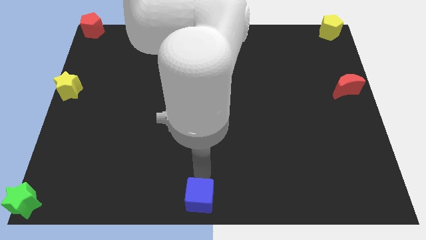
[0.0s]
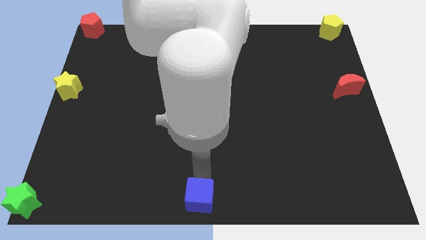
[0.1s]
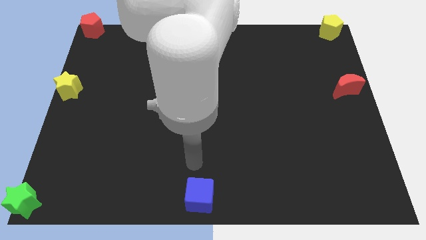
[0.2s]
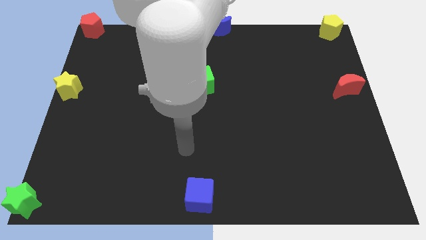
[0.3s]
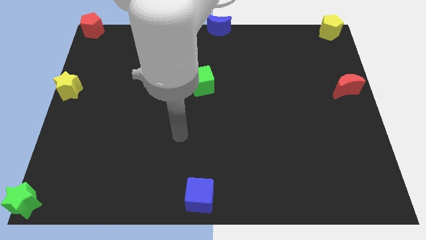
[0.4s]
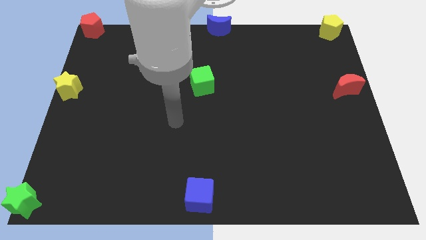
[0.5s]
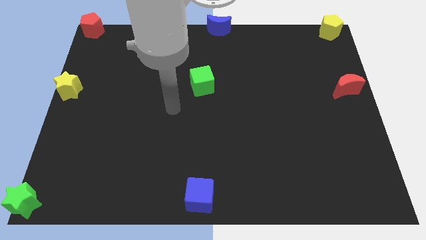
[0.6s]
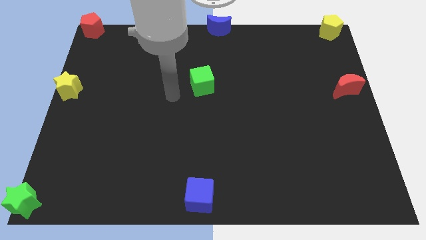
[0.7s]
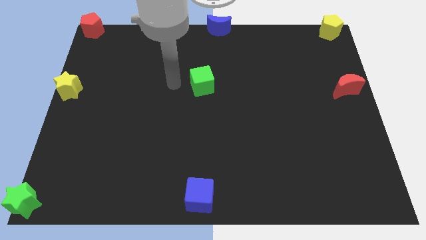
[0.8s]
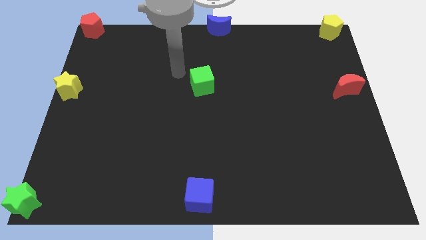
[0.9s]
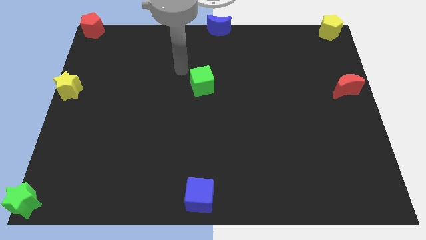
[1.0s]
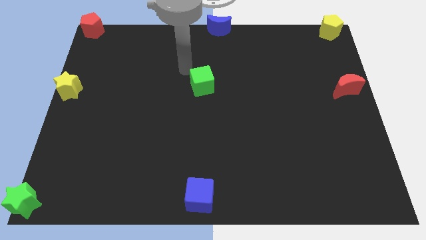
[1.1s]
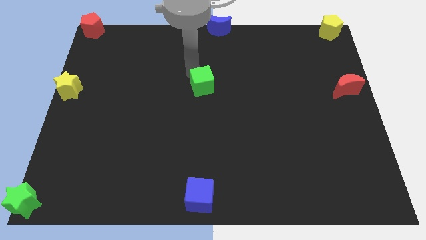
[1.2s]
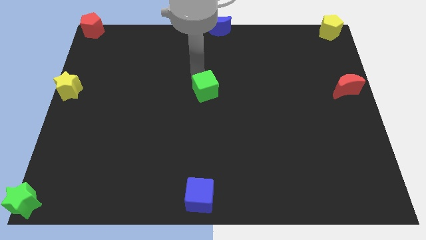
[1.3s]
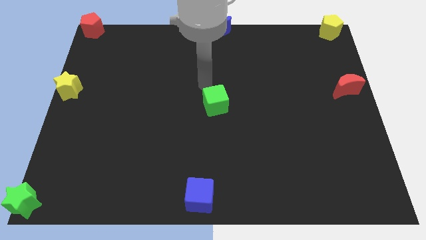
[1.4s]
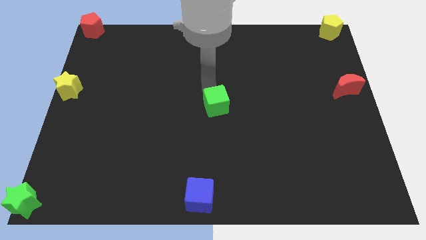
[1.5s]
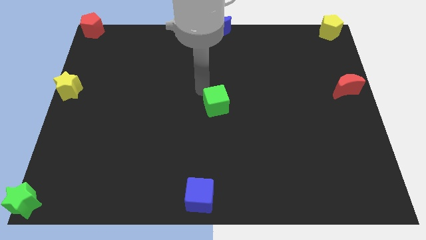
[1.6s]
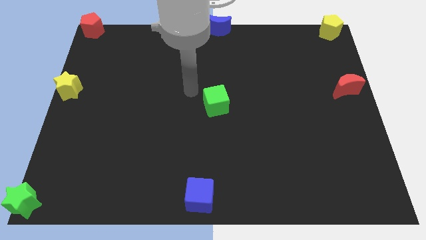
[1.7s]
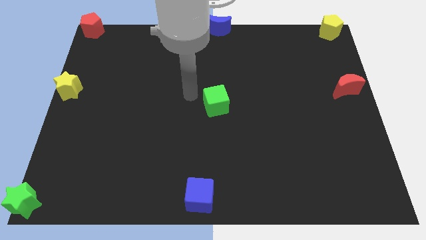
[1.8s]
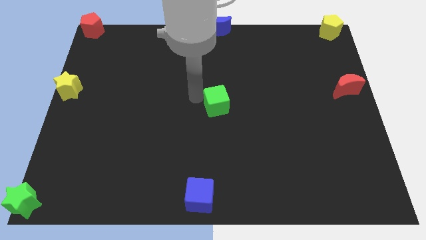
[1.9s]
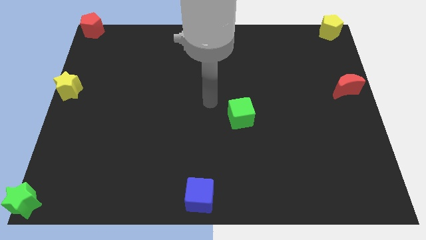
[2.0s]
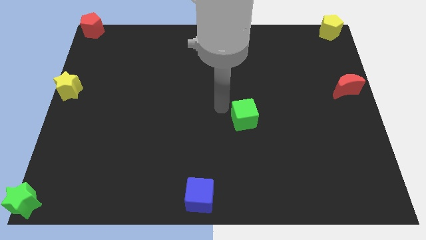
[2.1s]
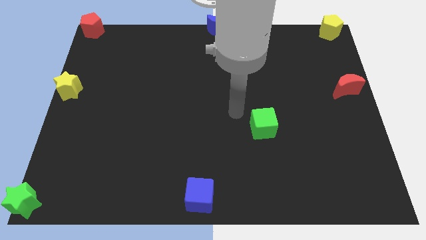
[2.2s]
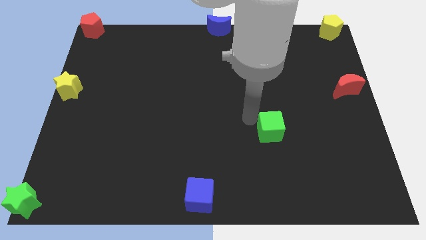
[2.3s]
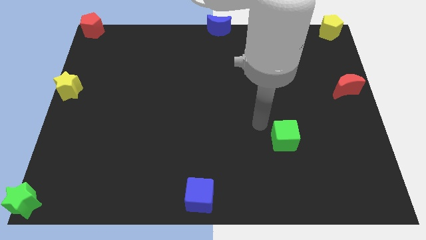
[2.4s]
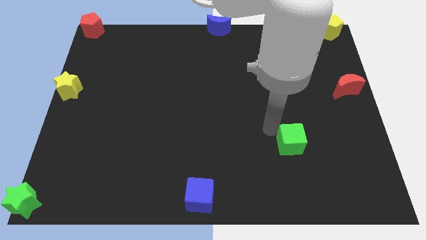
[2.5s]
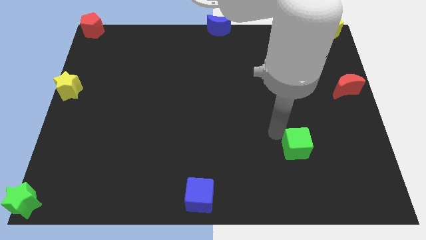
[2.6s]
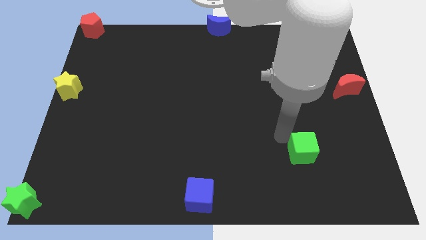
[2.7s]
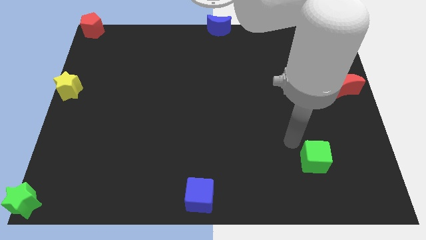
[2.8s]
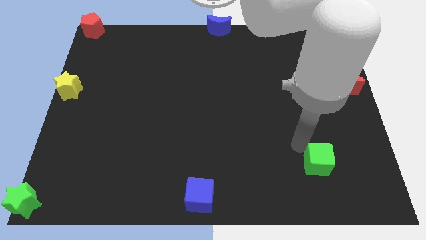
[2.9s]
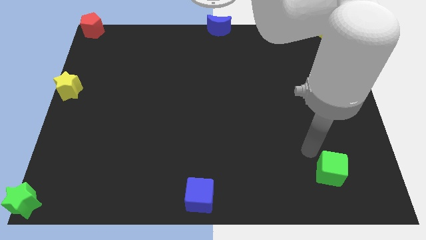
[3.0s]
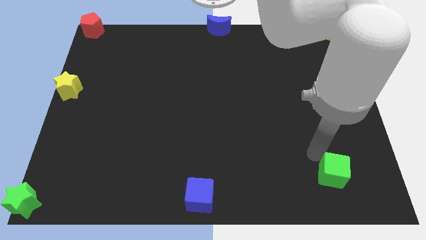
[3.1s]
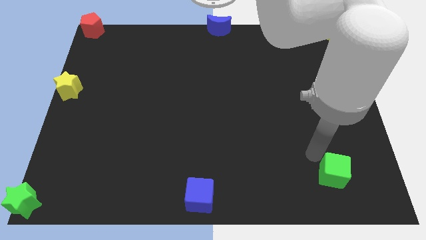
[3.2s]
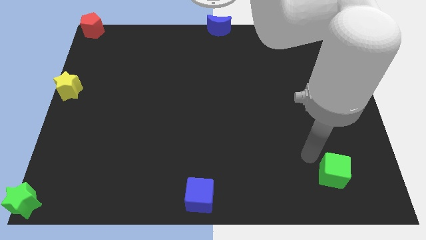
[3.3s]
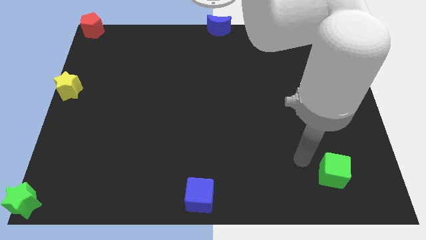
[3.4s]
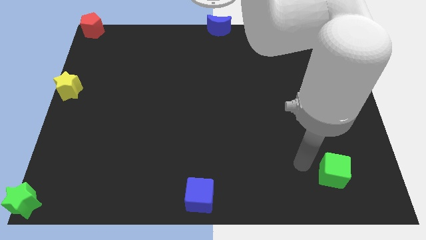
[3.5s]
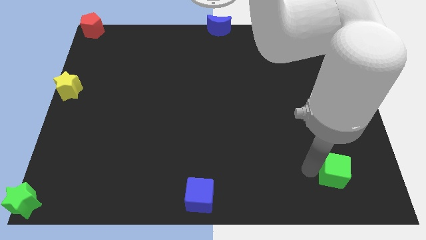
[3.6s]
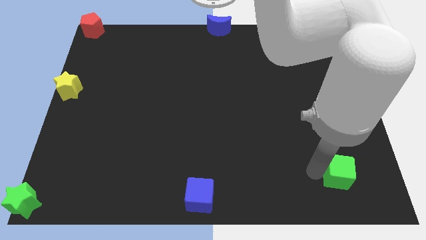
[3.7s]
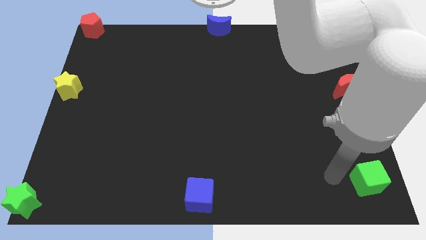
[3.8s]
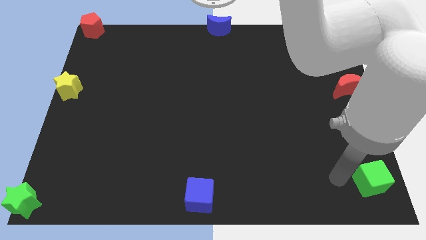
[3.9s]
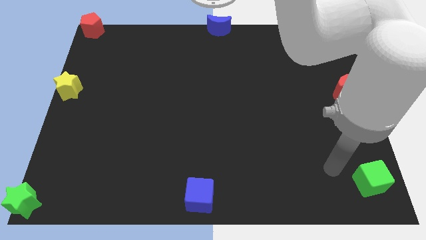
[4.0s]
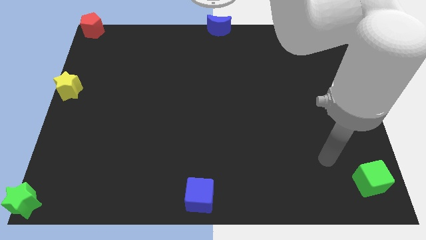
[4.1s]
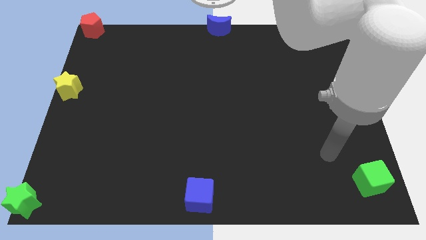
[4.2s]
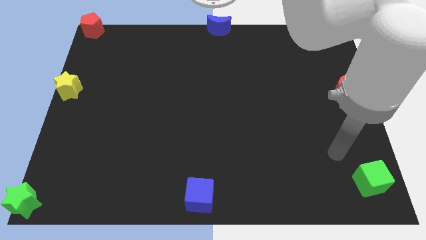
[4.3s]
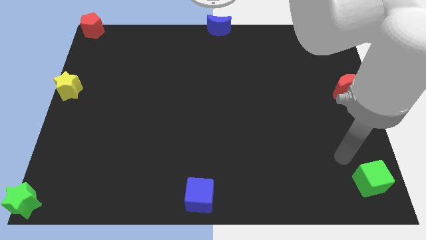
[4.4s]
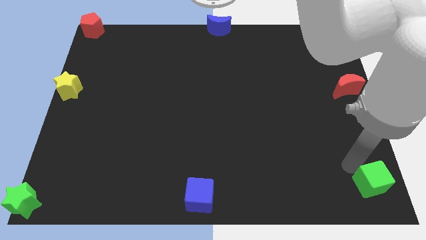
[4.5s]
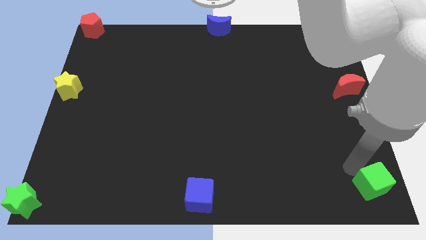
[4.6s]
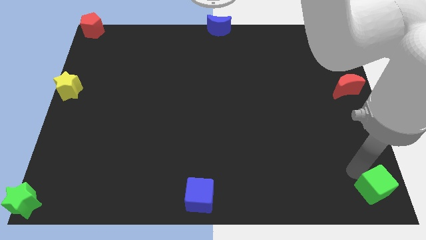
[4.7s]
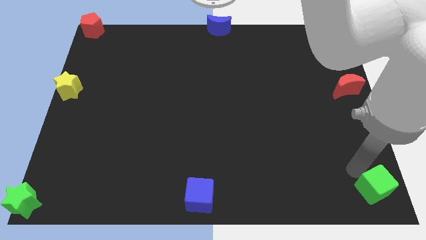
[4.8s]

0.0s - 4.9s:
push green cube to the bottom right corner of the board

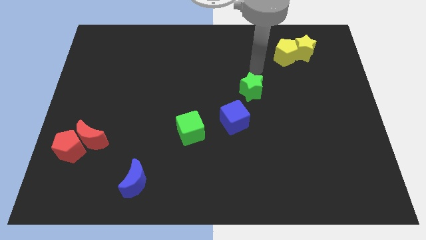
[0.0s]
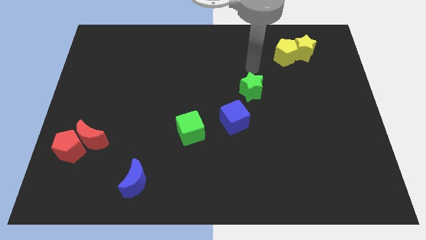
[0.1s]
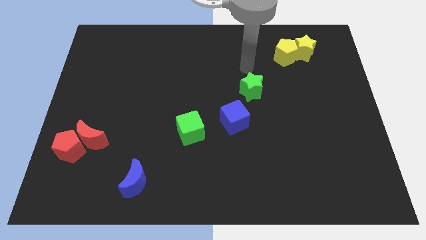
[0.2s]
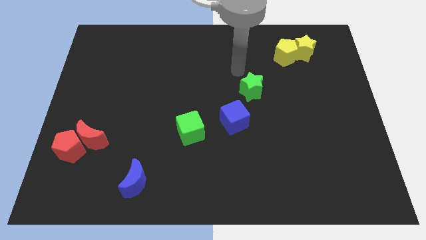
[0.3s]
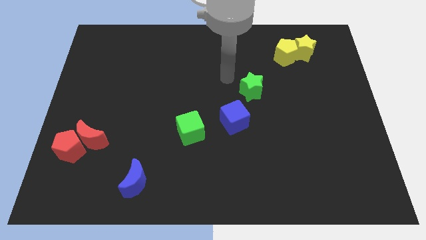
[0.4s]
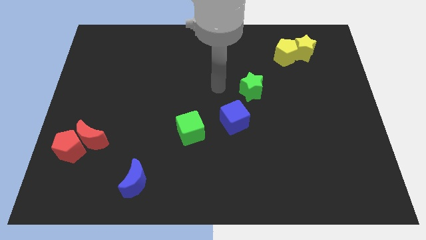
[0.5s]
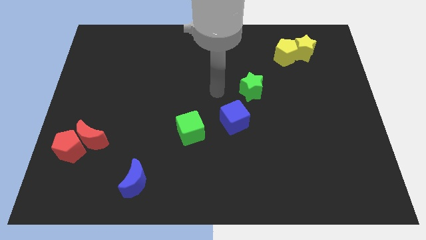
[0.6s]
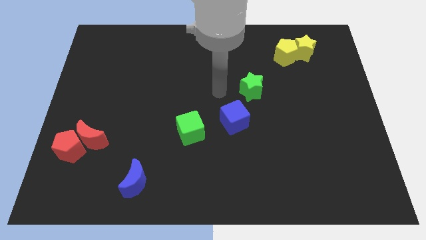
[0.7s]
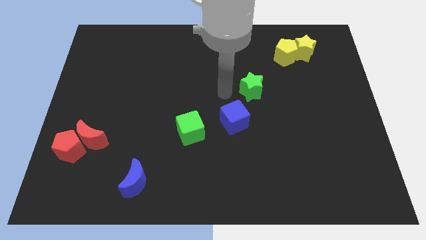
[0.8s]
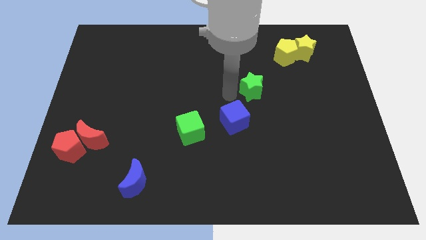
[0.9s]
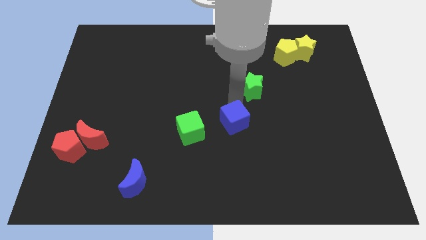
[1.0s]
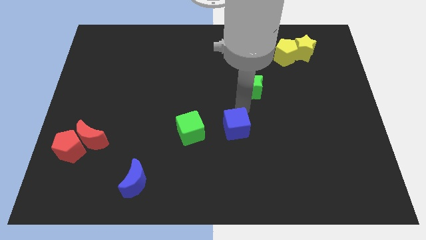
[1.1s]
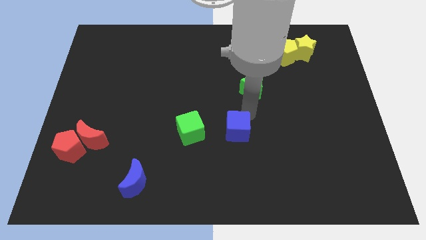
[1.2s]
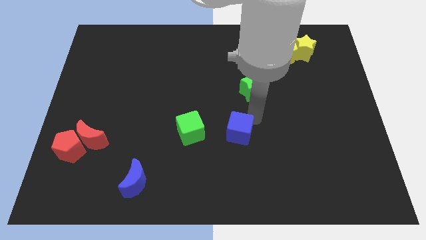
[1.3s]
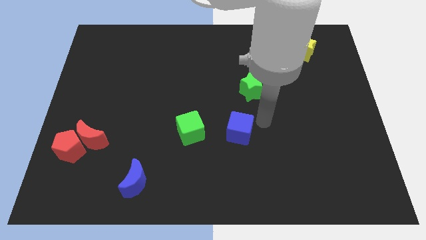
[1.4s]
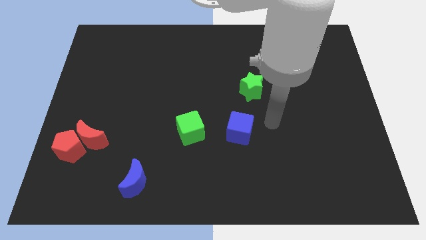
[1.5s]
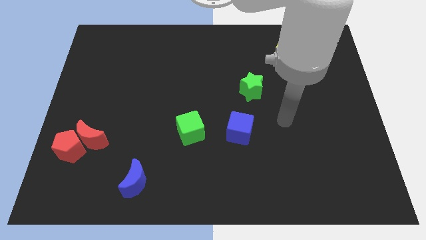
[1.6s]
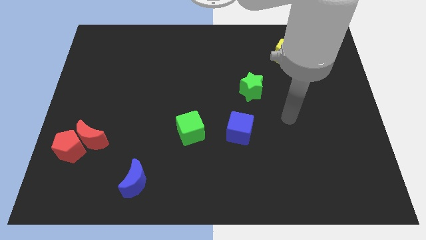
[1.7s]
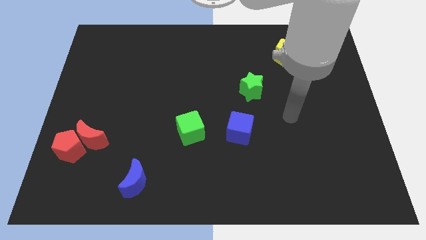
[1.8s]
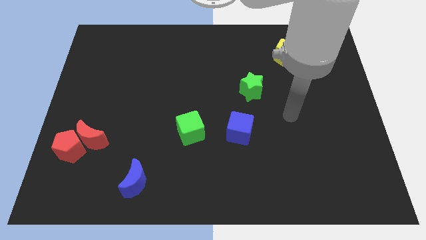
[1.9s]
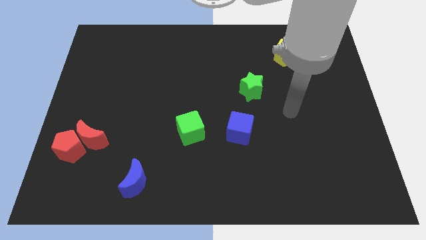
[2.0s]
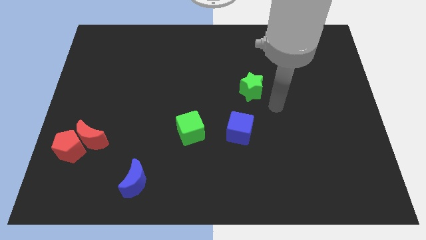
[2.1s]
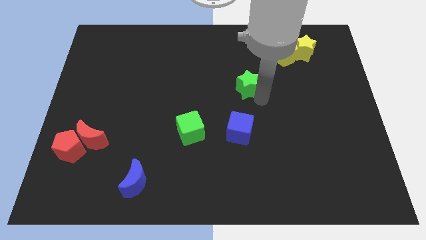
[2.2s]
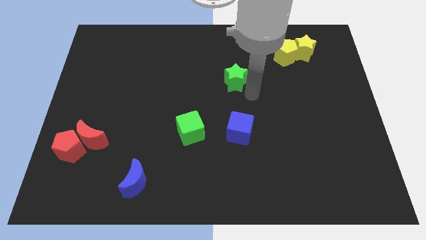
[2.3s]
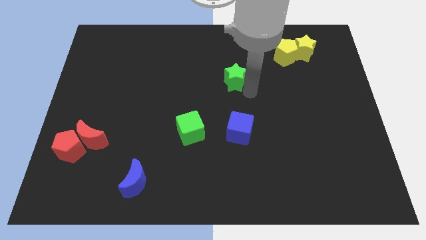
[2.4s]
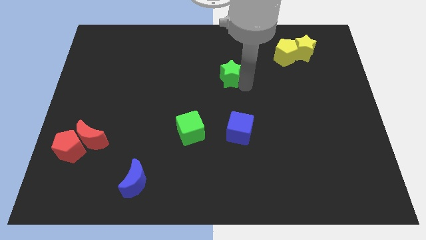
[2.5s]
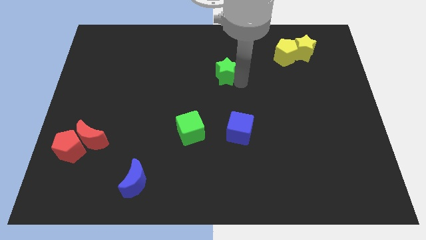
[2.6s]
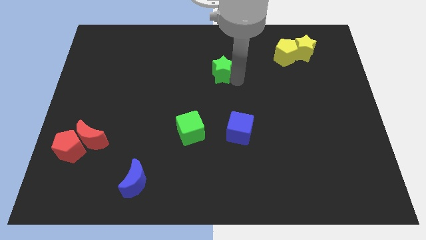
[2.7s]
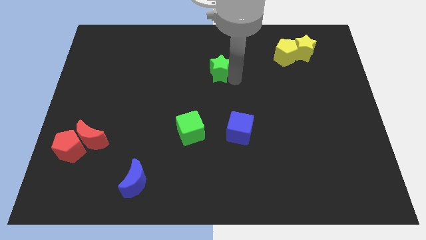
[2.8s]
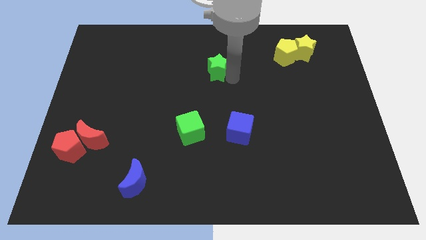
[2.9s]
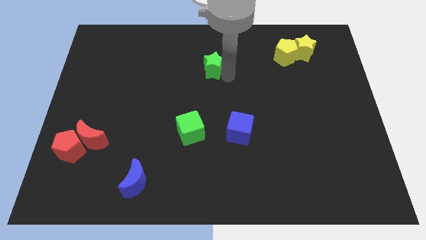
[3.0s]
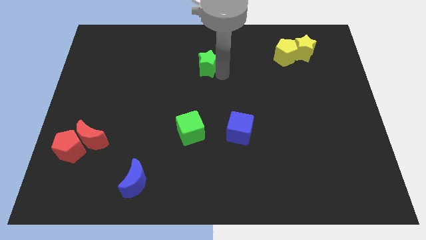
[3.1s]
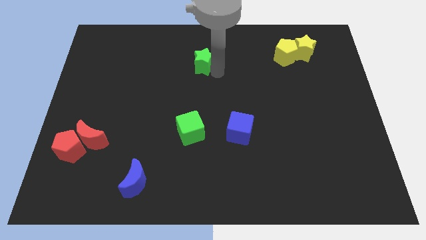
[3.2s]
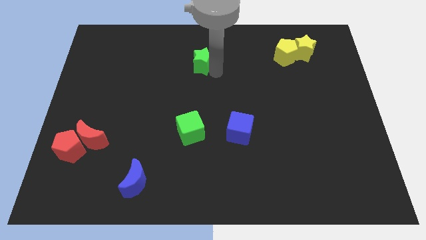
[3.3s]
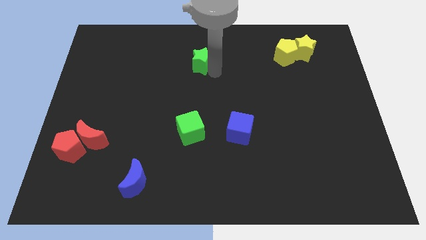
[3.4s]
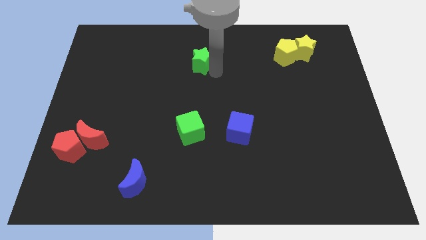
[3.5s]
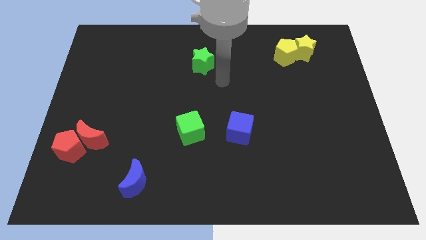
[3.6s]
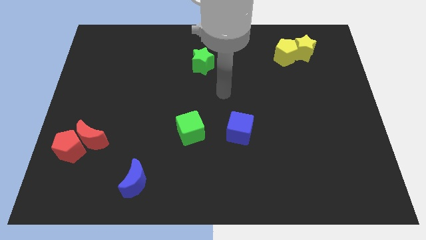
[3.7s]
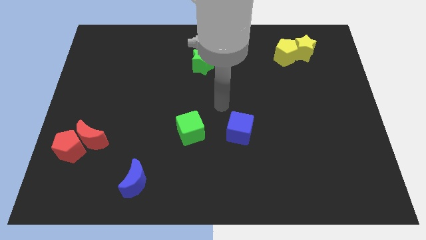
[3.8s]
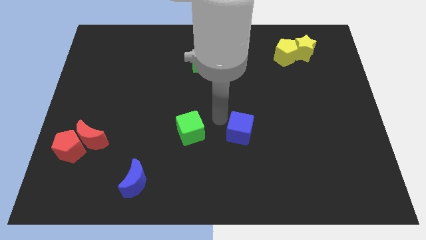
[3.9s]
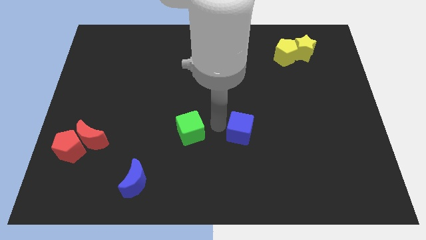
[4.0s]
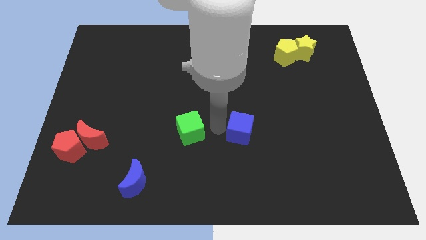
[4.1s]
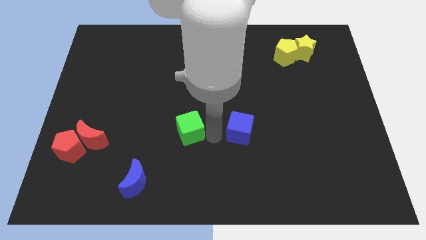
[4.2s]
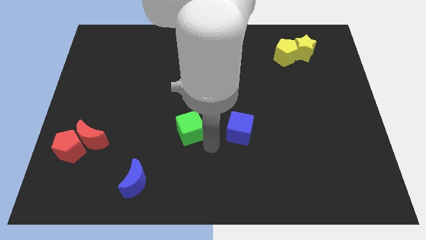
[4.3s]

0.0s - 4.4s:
put the green star vertically above the green cube
